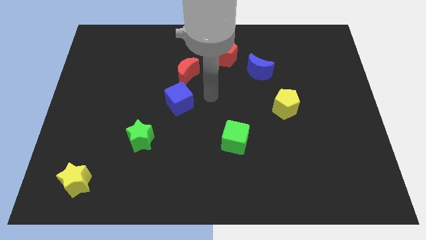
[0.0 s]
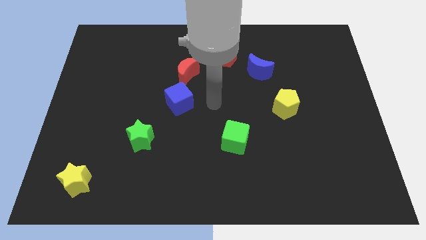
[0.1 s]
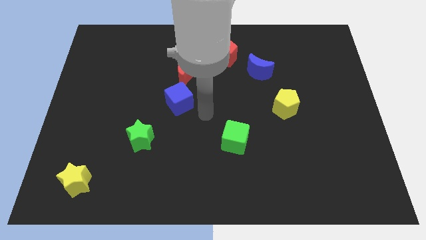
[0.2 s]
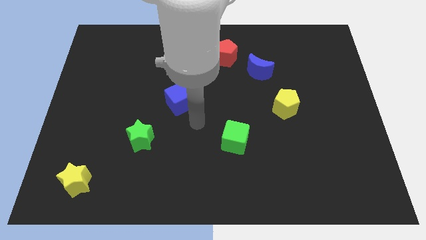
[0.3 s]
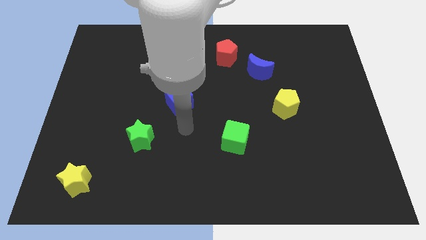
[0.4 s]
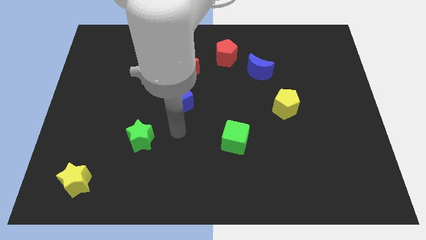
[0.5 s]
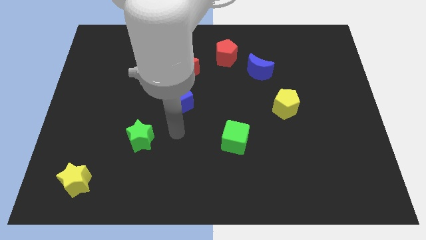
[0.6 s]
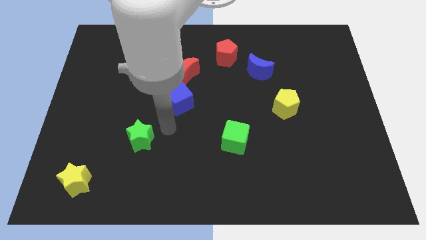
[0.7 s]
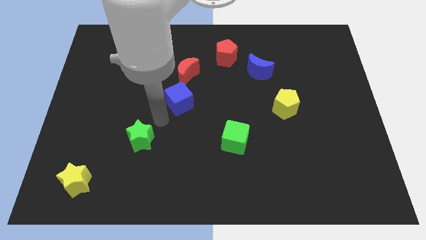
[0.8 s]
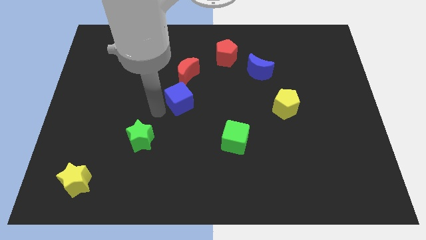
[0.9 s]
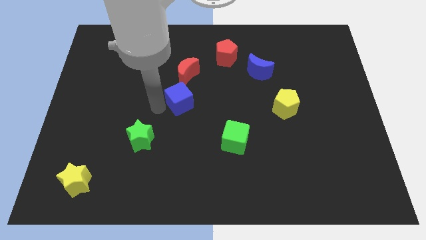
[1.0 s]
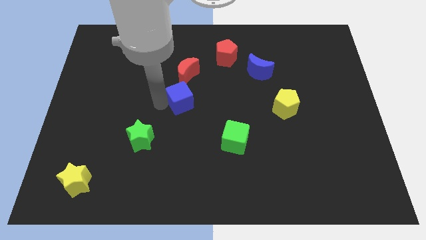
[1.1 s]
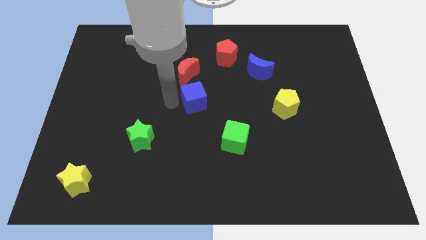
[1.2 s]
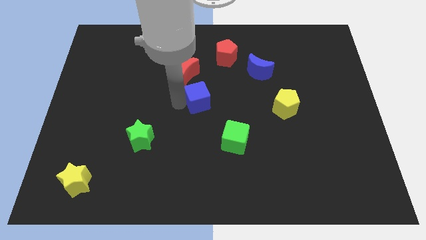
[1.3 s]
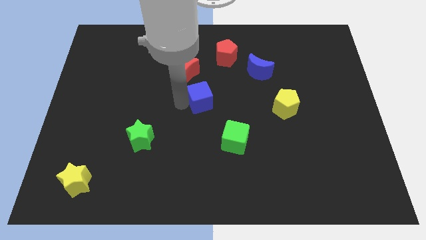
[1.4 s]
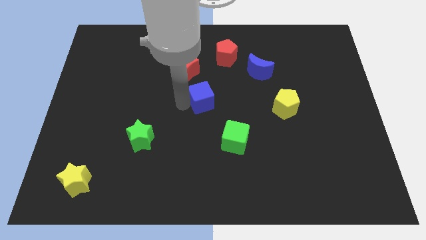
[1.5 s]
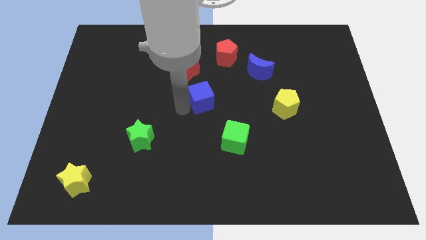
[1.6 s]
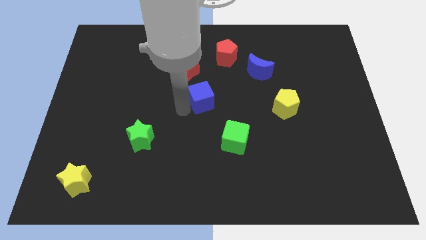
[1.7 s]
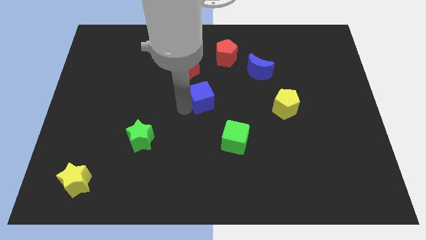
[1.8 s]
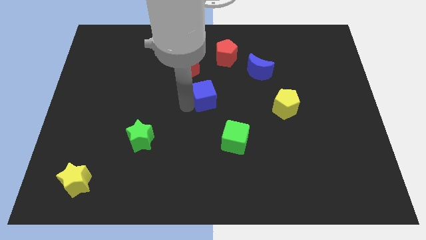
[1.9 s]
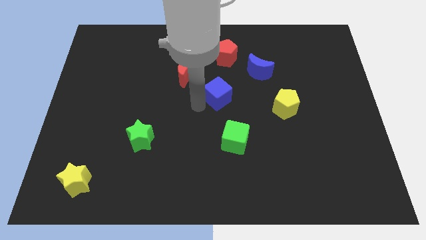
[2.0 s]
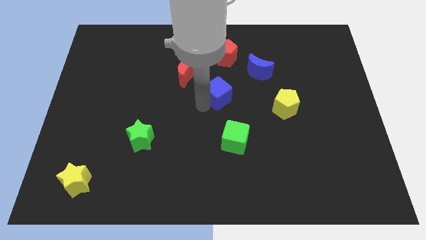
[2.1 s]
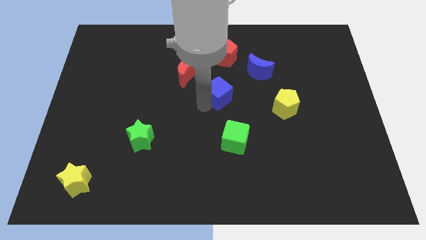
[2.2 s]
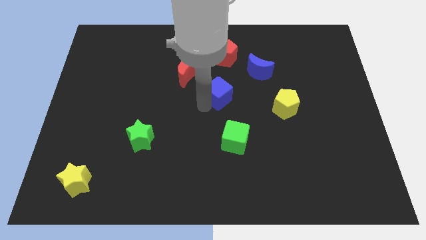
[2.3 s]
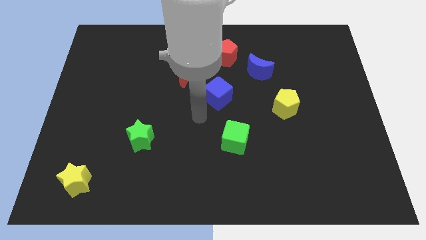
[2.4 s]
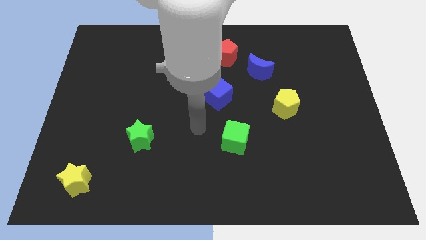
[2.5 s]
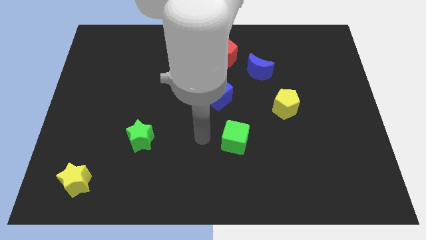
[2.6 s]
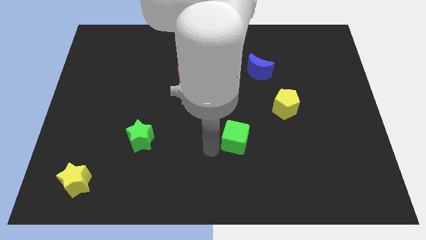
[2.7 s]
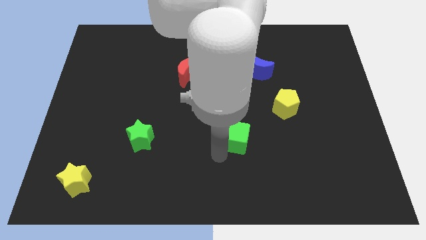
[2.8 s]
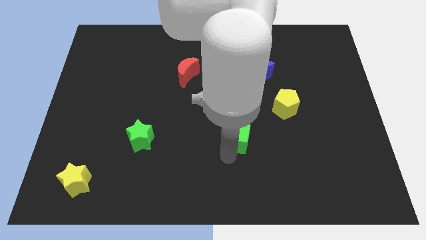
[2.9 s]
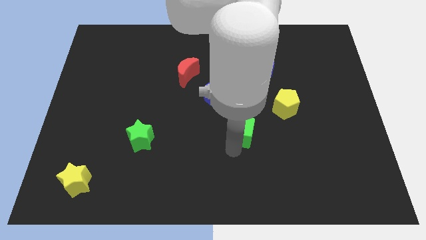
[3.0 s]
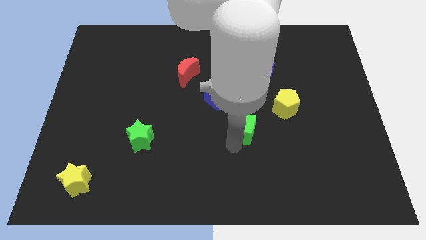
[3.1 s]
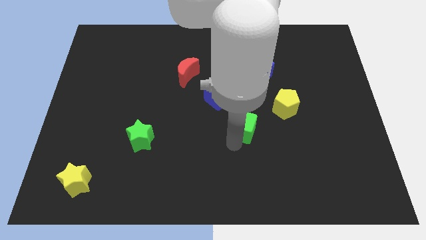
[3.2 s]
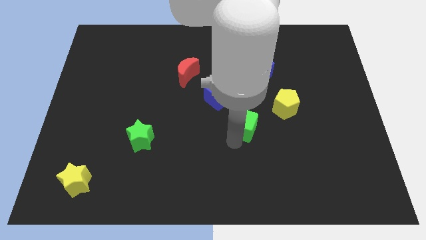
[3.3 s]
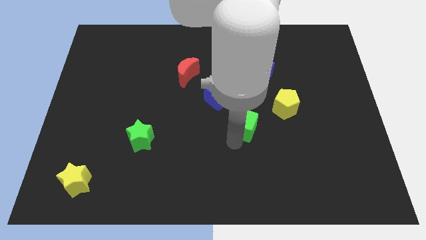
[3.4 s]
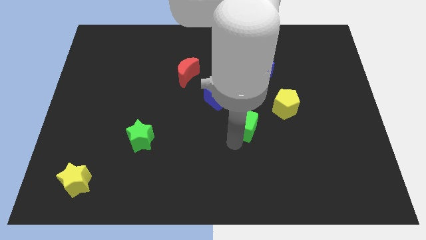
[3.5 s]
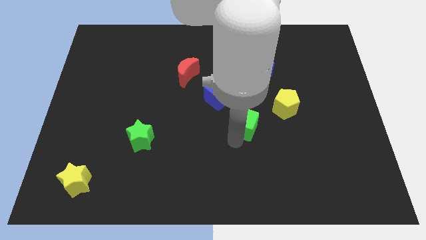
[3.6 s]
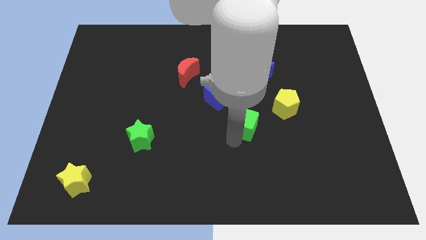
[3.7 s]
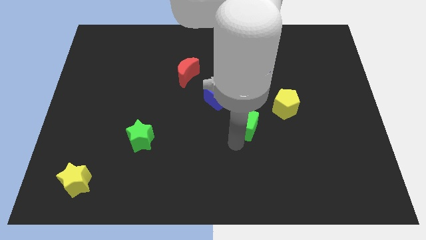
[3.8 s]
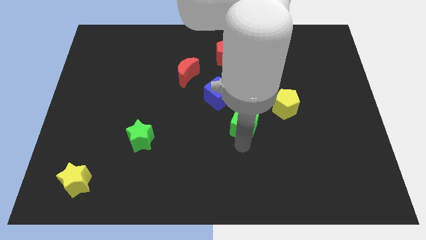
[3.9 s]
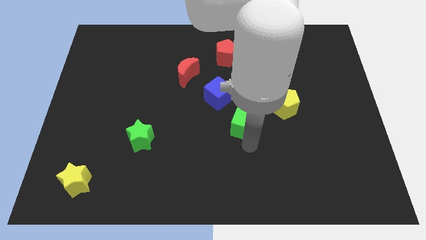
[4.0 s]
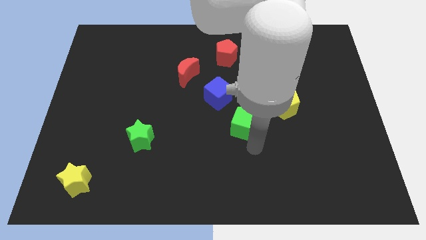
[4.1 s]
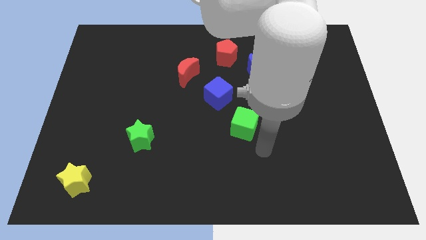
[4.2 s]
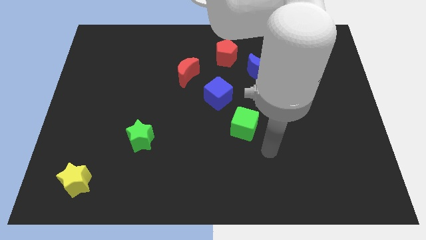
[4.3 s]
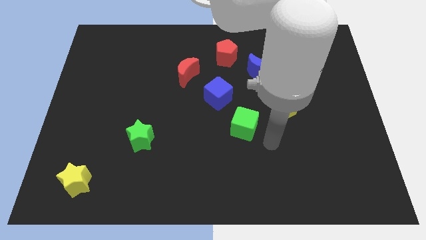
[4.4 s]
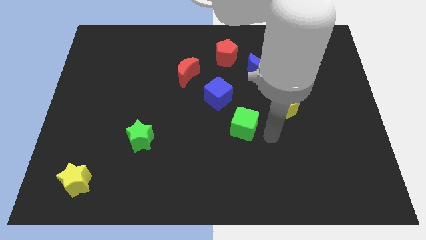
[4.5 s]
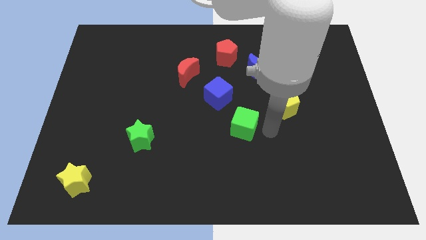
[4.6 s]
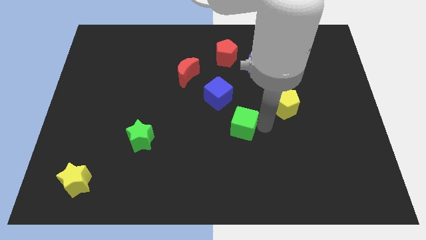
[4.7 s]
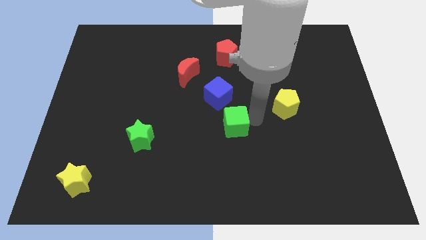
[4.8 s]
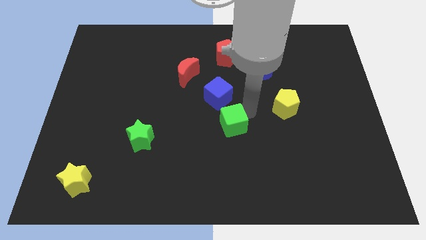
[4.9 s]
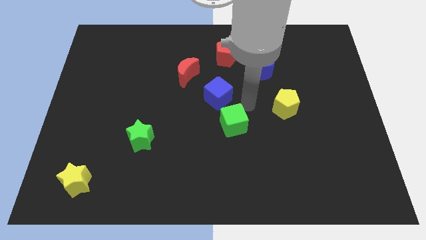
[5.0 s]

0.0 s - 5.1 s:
move the blue cube and green cube slightly towards the center of the board

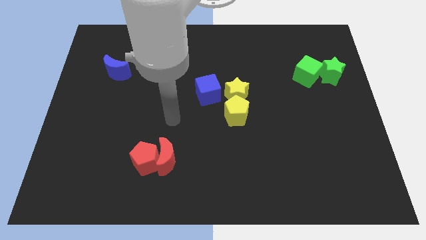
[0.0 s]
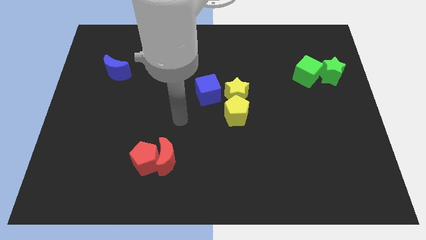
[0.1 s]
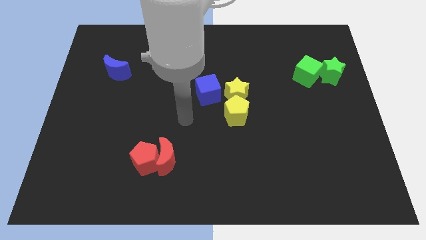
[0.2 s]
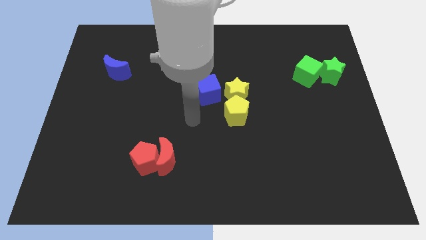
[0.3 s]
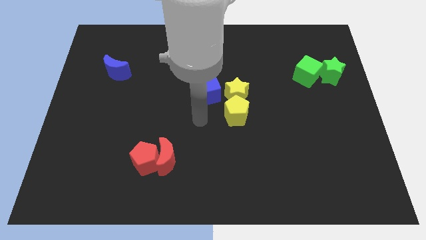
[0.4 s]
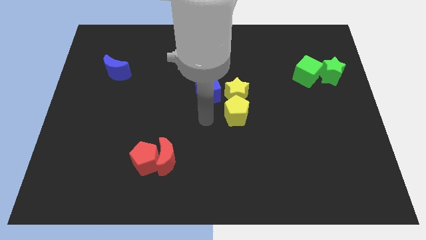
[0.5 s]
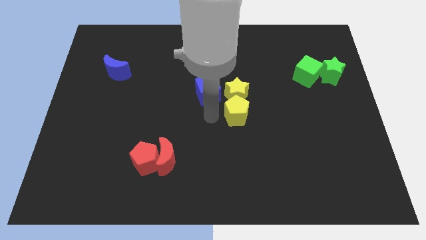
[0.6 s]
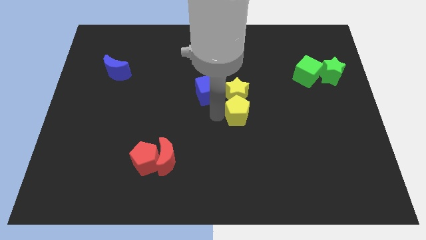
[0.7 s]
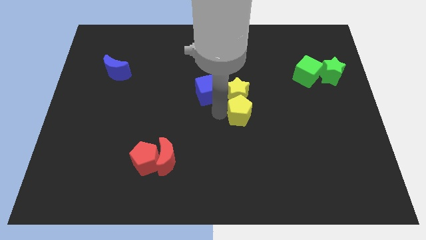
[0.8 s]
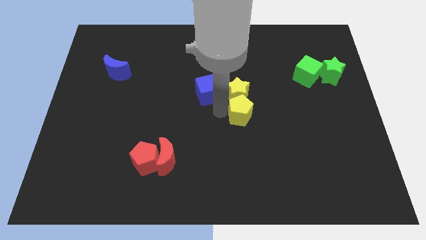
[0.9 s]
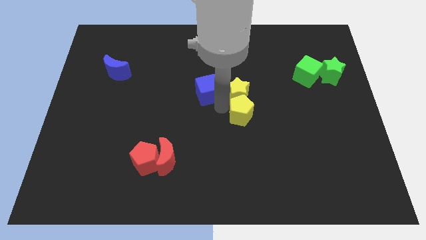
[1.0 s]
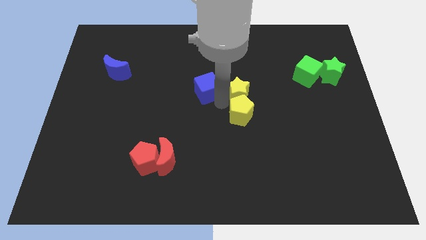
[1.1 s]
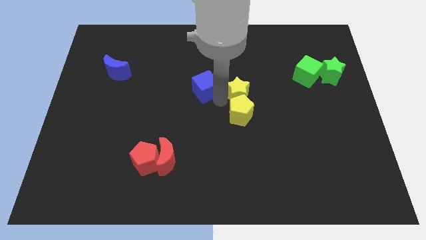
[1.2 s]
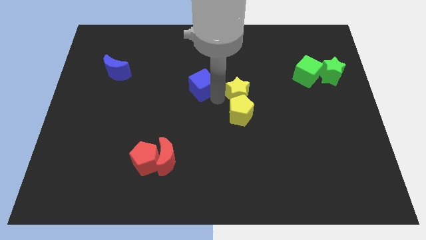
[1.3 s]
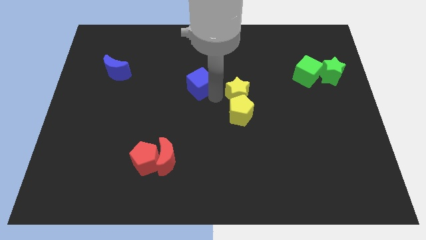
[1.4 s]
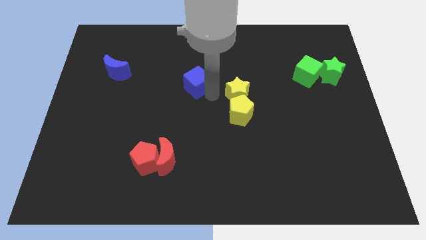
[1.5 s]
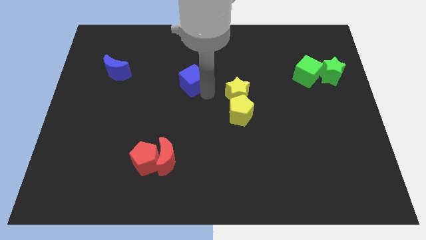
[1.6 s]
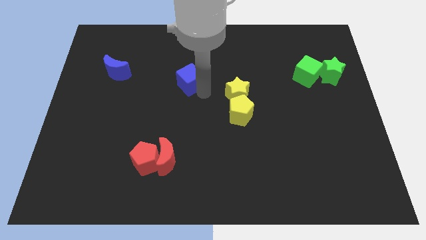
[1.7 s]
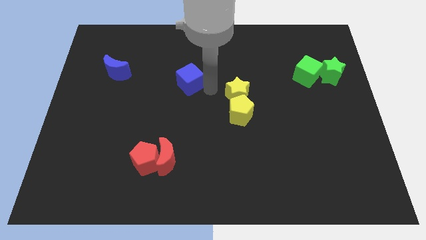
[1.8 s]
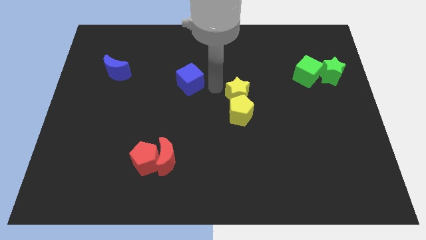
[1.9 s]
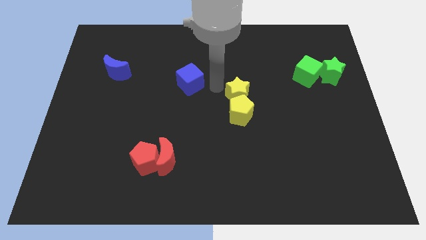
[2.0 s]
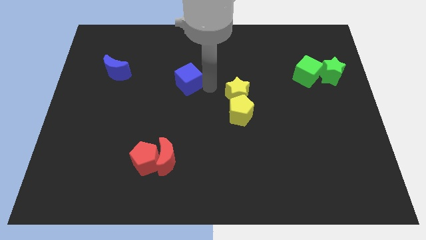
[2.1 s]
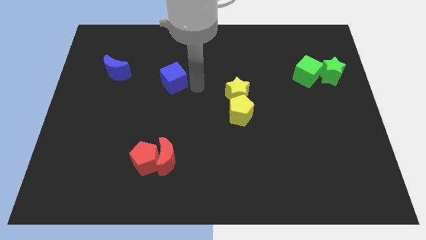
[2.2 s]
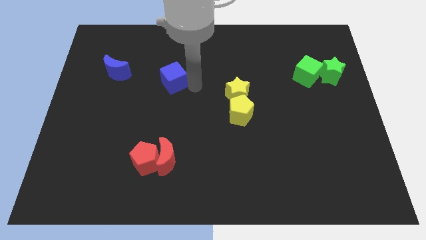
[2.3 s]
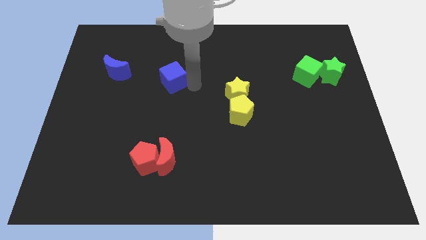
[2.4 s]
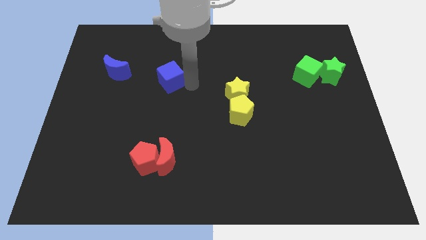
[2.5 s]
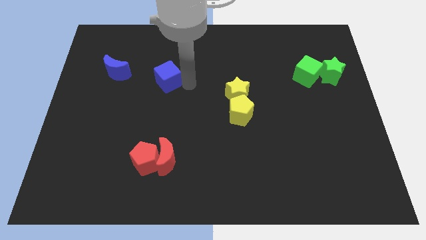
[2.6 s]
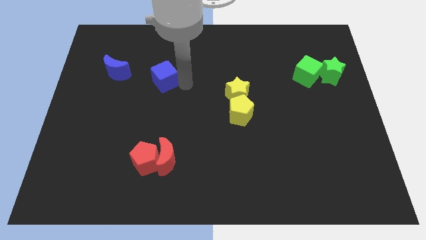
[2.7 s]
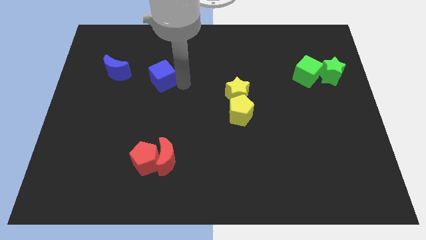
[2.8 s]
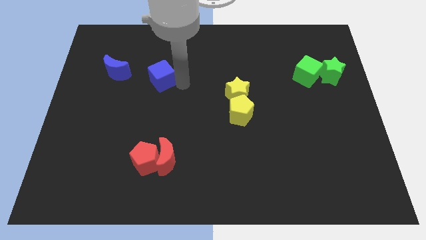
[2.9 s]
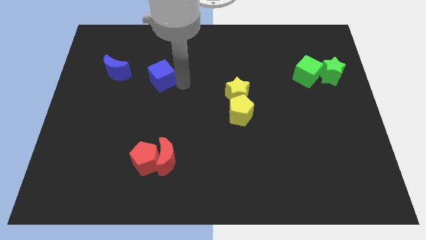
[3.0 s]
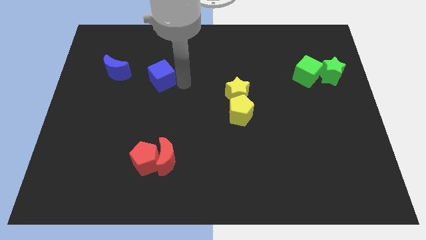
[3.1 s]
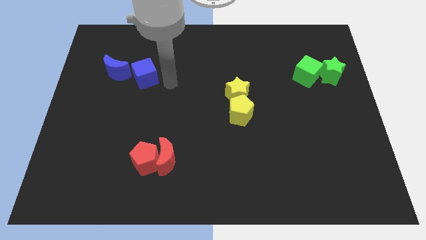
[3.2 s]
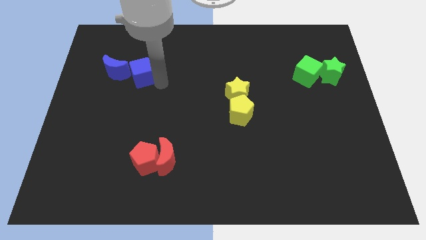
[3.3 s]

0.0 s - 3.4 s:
push the blue cube right to the blue moon

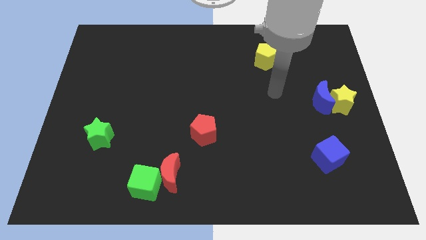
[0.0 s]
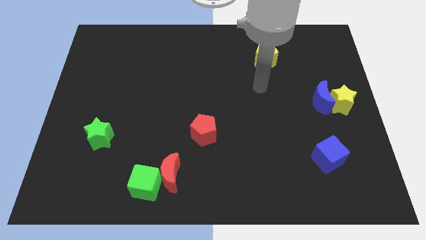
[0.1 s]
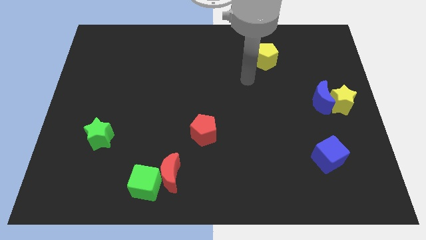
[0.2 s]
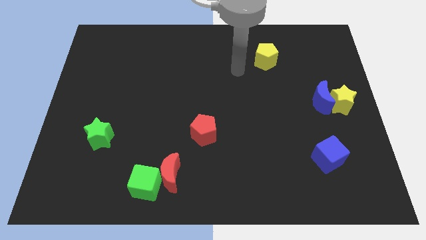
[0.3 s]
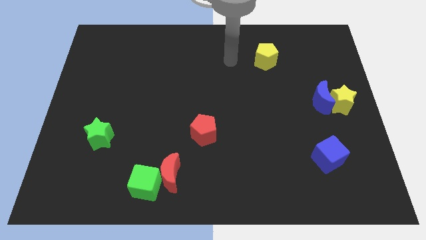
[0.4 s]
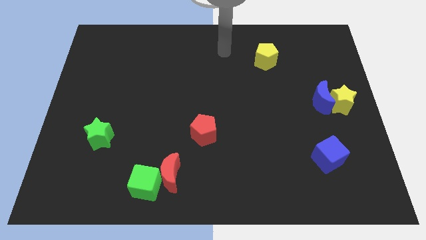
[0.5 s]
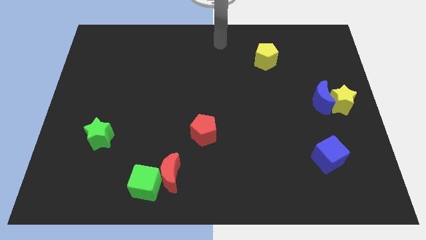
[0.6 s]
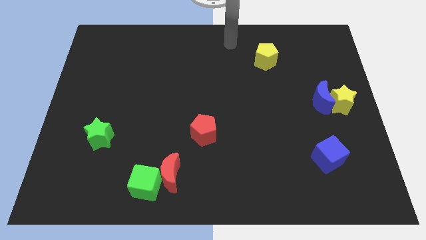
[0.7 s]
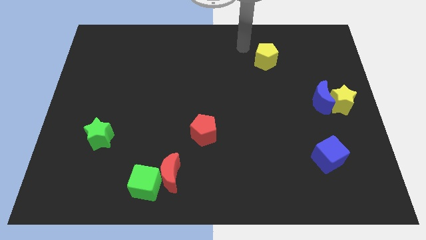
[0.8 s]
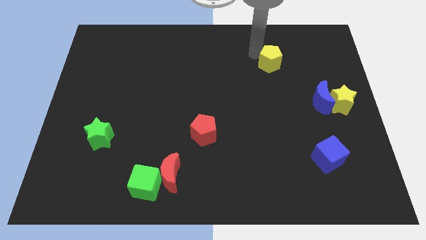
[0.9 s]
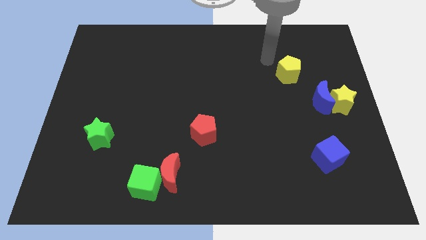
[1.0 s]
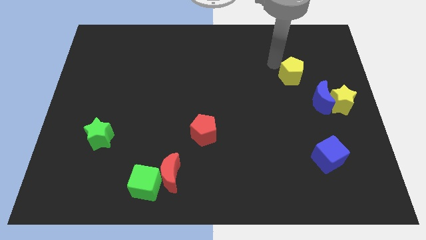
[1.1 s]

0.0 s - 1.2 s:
place the yellow pentagon diagonally top left to the blue moon
